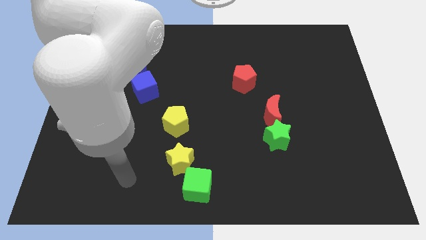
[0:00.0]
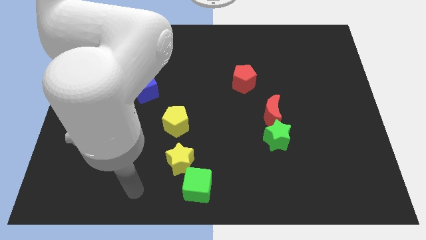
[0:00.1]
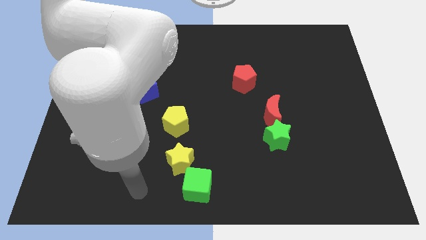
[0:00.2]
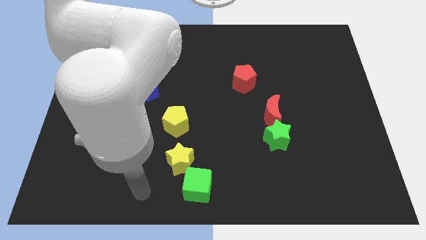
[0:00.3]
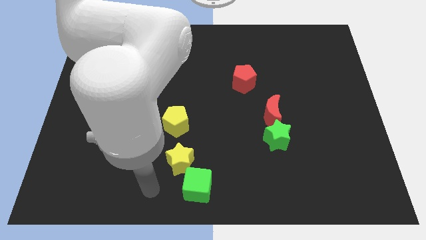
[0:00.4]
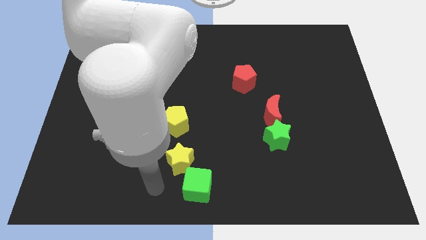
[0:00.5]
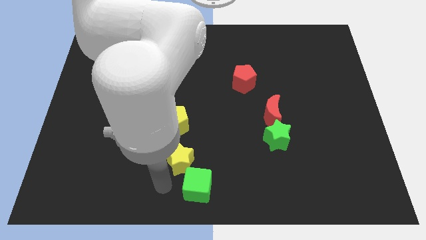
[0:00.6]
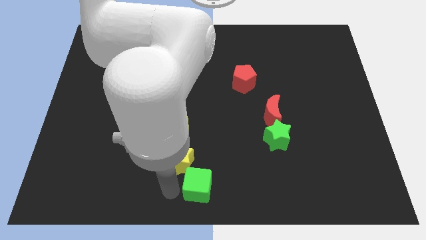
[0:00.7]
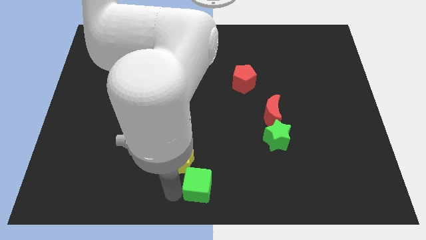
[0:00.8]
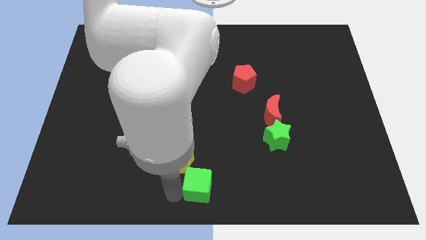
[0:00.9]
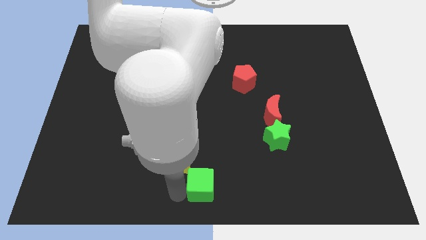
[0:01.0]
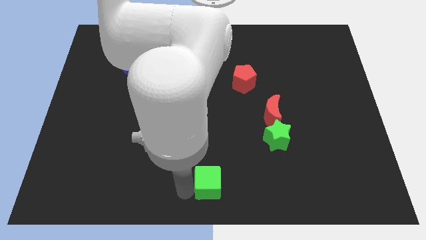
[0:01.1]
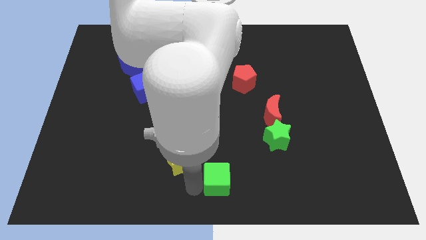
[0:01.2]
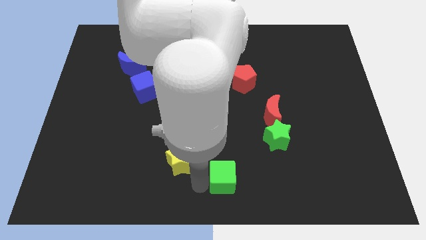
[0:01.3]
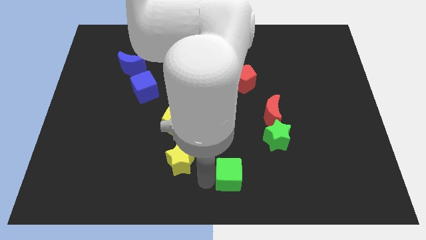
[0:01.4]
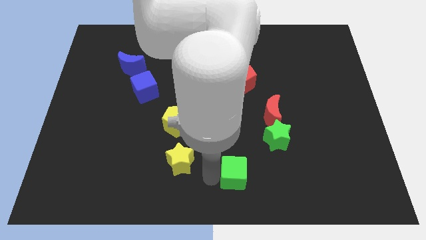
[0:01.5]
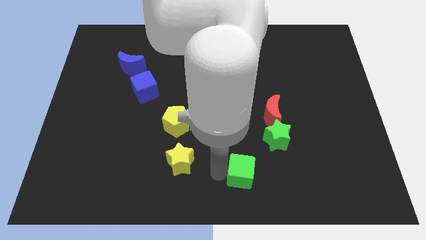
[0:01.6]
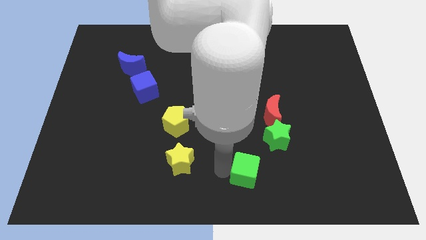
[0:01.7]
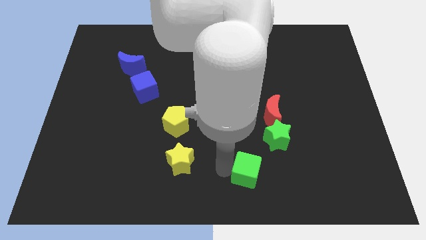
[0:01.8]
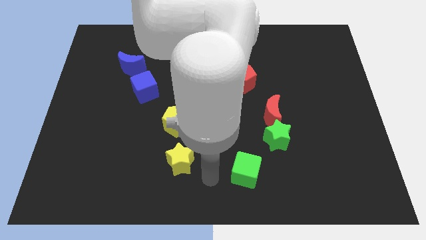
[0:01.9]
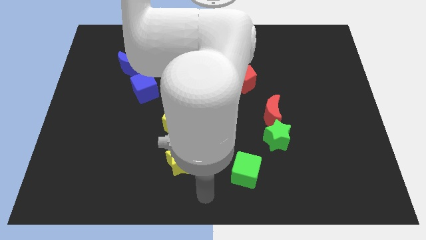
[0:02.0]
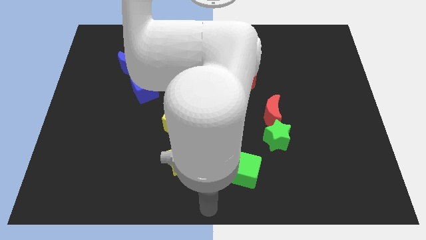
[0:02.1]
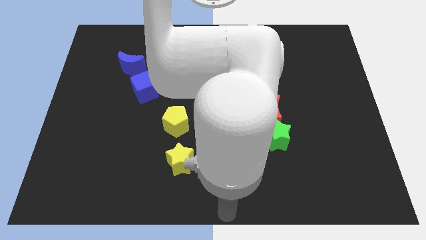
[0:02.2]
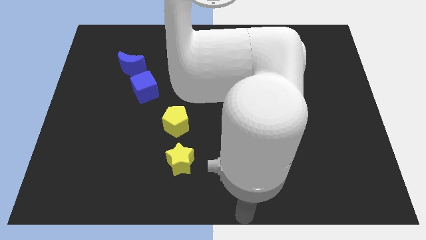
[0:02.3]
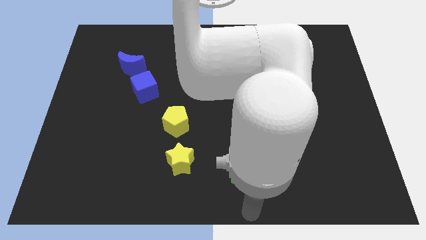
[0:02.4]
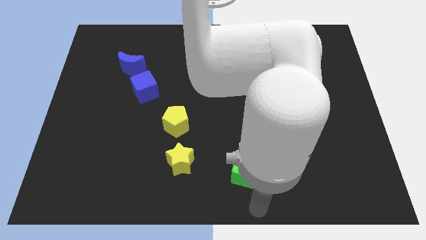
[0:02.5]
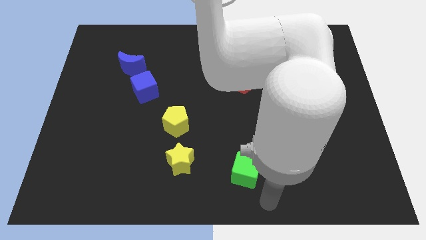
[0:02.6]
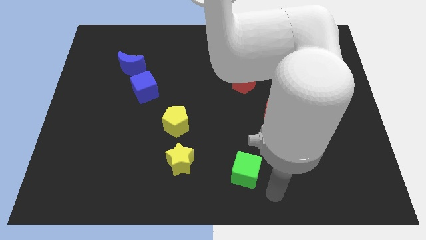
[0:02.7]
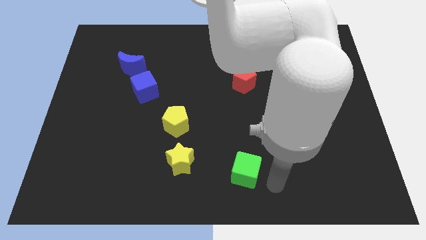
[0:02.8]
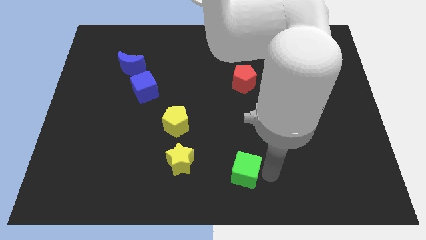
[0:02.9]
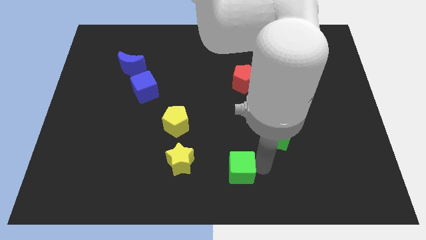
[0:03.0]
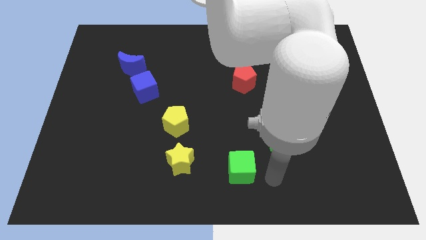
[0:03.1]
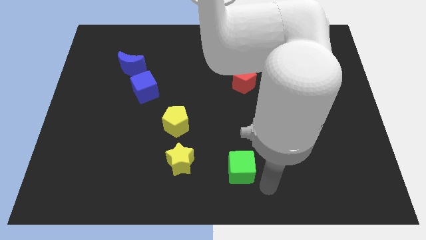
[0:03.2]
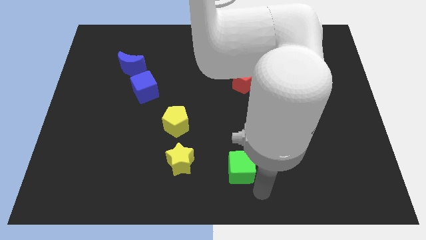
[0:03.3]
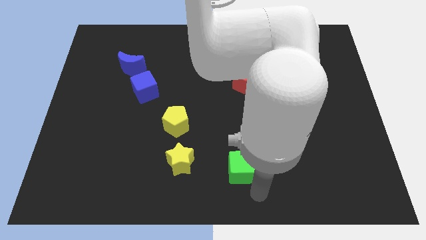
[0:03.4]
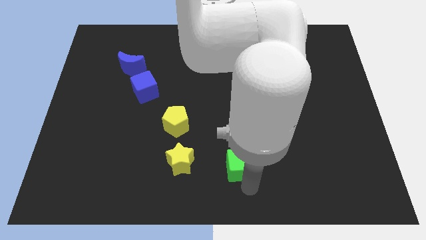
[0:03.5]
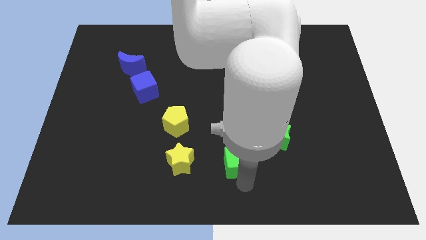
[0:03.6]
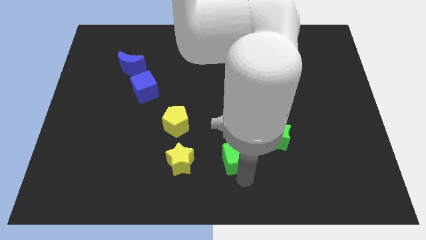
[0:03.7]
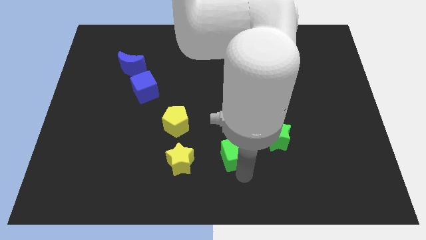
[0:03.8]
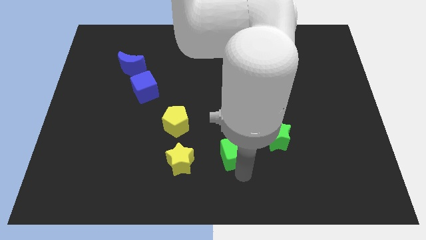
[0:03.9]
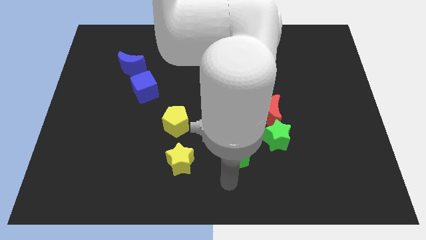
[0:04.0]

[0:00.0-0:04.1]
place green cube in between yellow and green stars

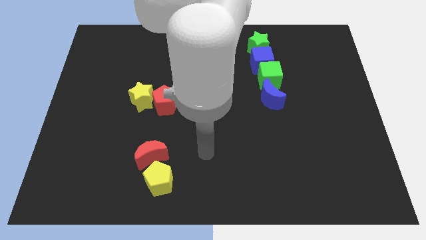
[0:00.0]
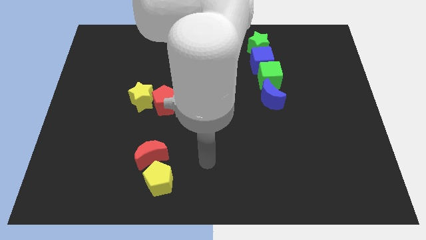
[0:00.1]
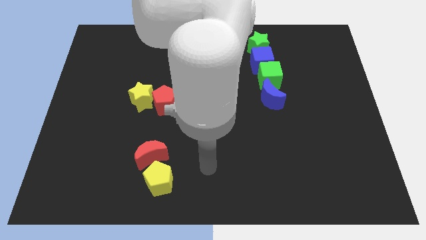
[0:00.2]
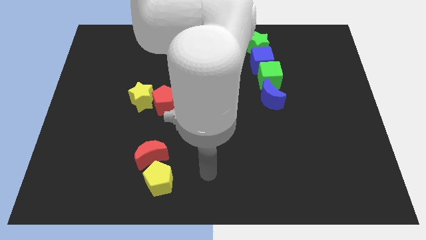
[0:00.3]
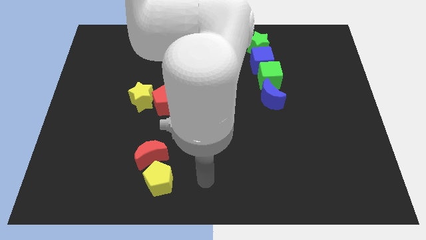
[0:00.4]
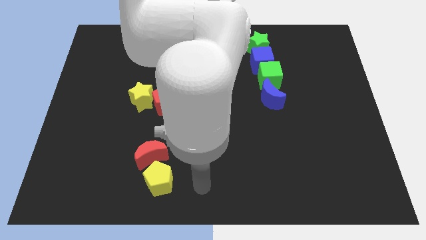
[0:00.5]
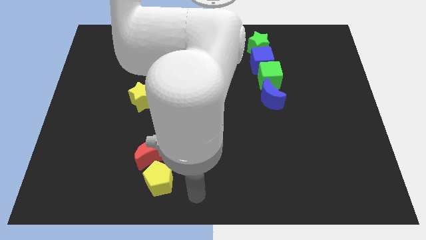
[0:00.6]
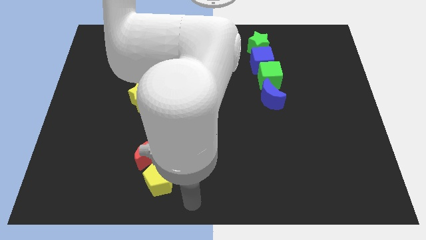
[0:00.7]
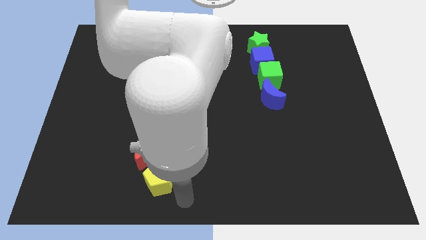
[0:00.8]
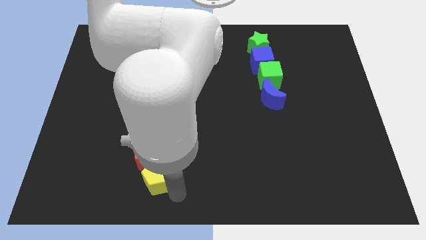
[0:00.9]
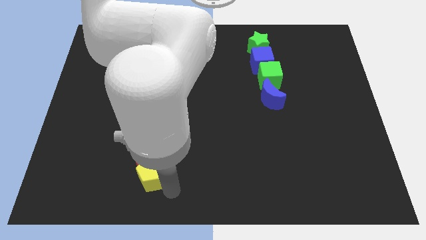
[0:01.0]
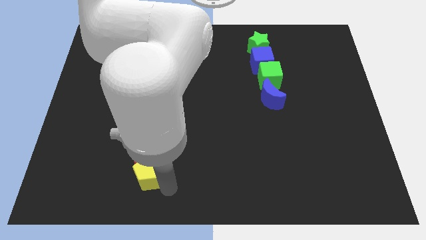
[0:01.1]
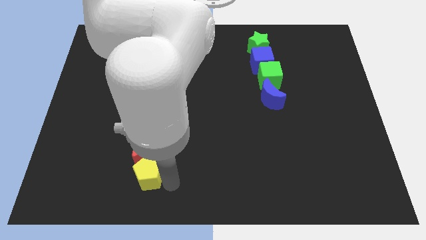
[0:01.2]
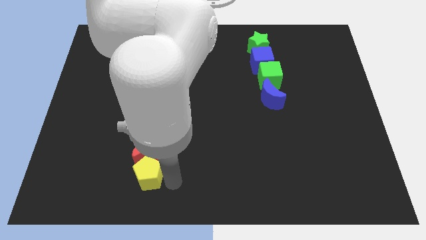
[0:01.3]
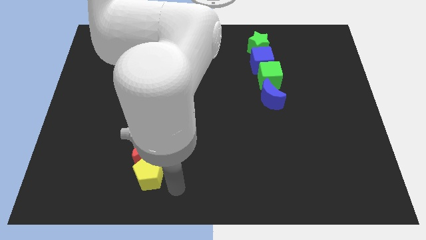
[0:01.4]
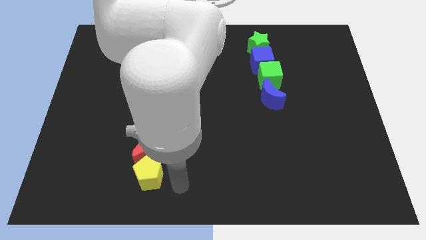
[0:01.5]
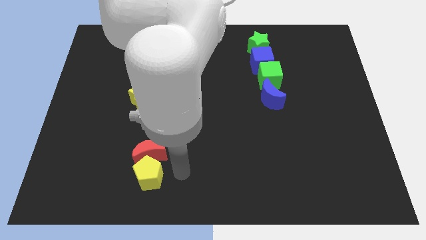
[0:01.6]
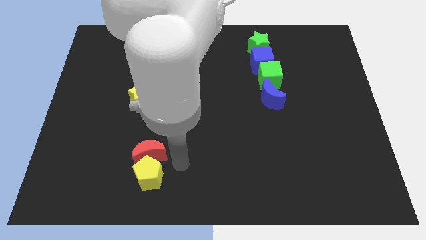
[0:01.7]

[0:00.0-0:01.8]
slightly move the yellow pentagon below the red crescent

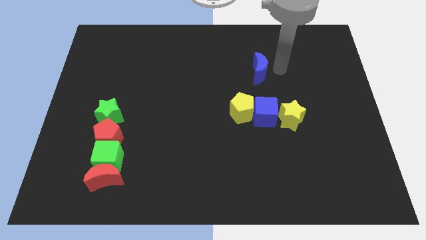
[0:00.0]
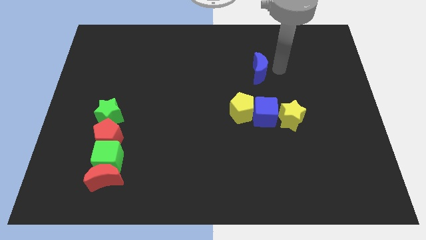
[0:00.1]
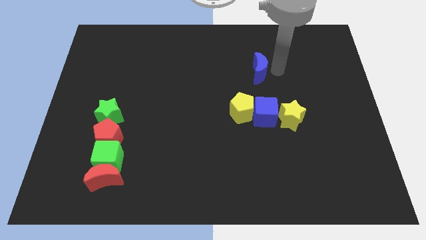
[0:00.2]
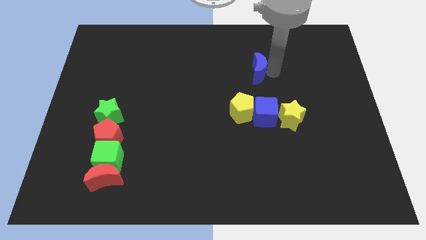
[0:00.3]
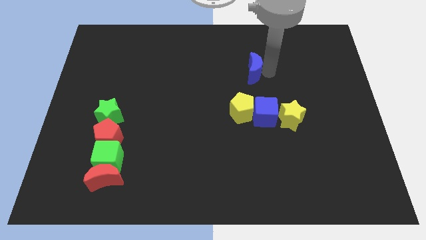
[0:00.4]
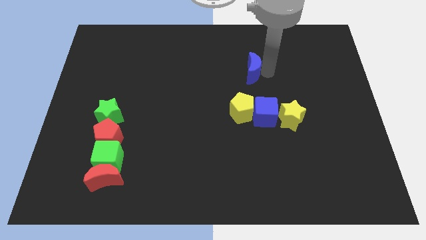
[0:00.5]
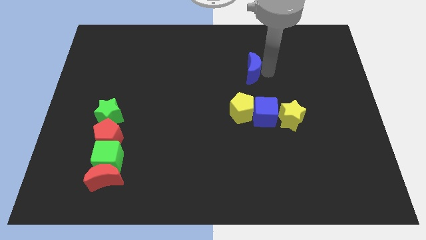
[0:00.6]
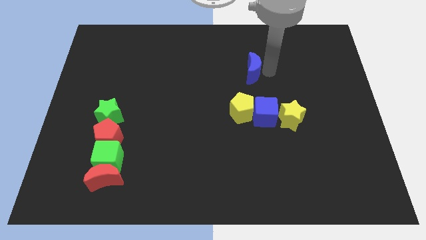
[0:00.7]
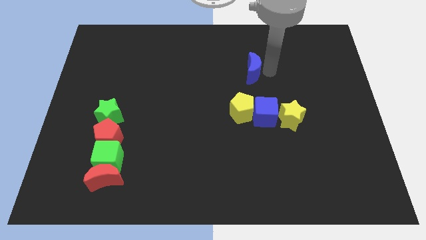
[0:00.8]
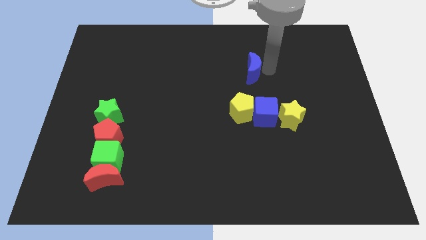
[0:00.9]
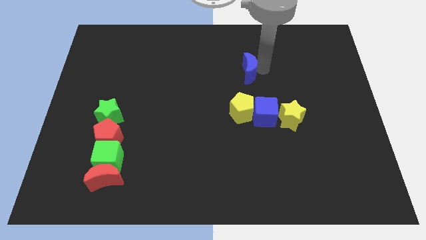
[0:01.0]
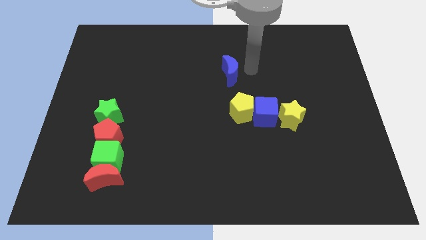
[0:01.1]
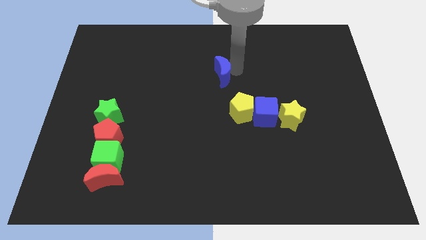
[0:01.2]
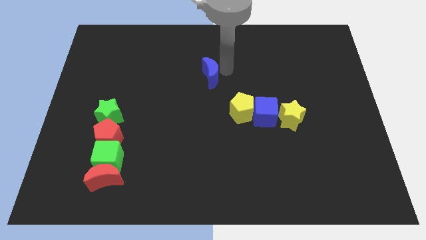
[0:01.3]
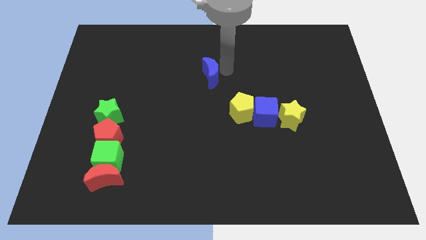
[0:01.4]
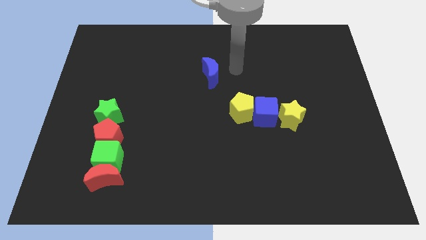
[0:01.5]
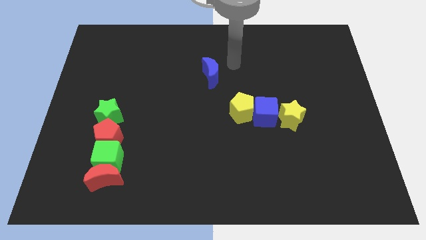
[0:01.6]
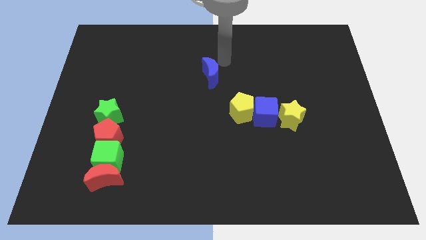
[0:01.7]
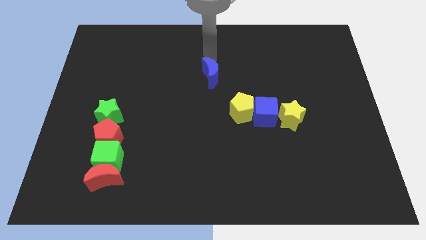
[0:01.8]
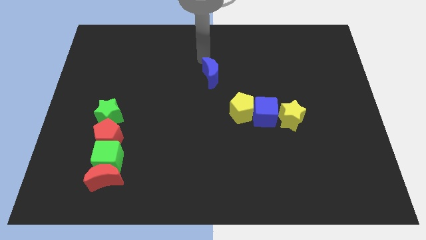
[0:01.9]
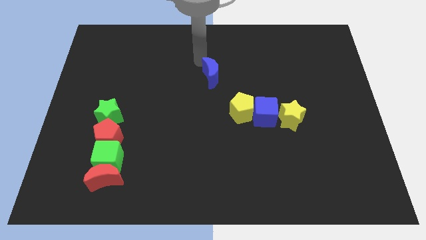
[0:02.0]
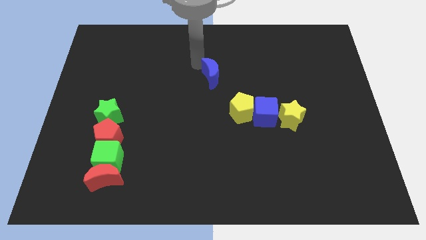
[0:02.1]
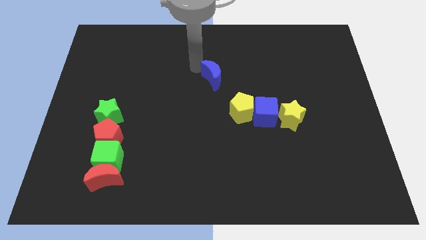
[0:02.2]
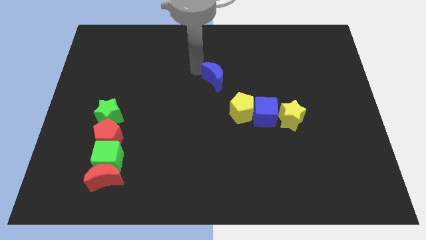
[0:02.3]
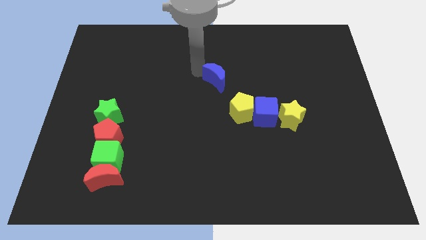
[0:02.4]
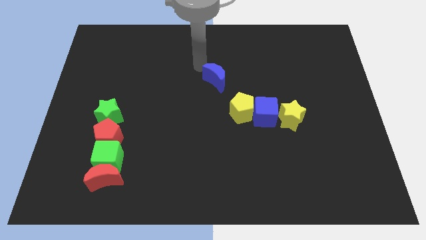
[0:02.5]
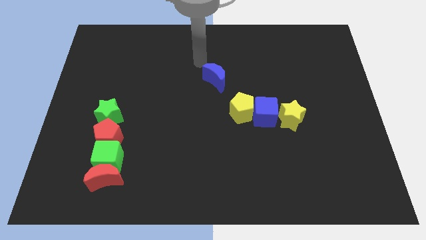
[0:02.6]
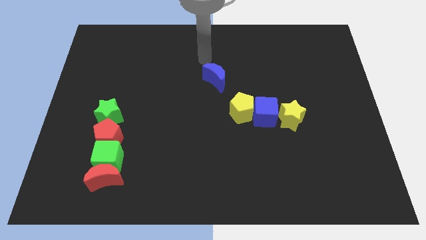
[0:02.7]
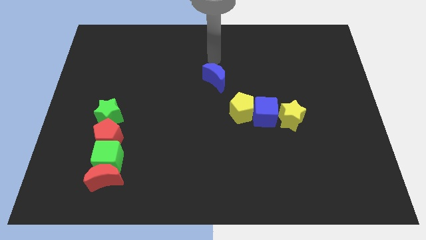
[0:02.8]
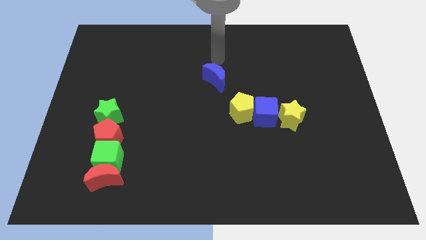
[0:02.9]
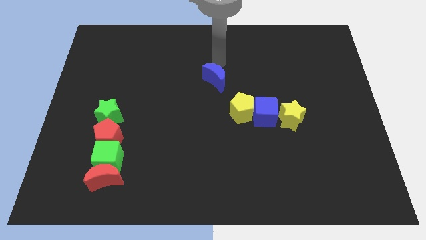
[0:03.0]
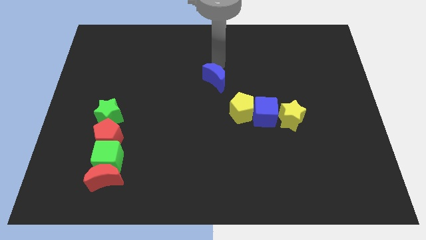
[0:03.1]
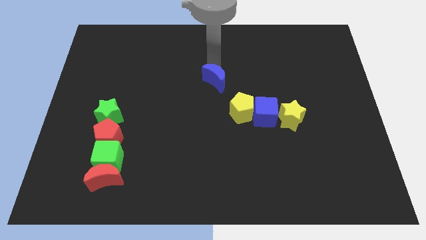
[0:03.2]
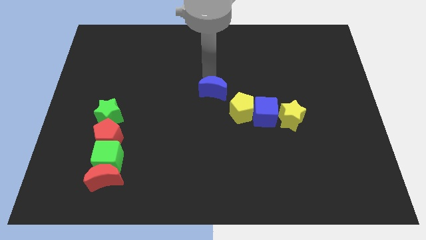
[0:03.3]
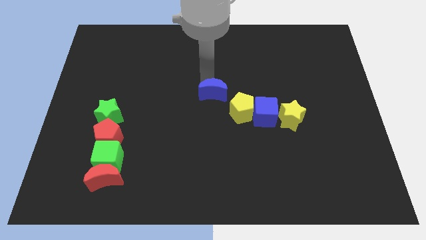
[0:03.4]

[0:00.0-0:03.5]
slide the blue crescent towards the left side of the yellow pentagon
